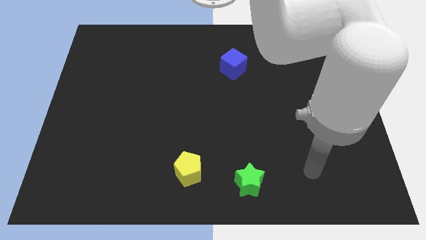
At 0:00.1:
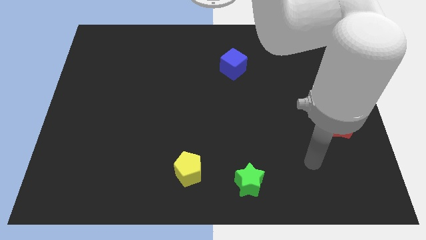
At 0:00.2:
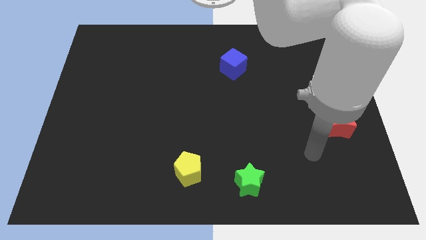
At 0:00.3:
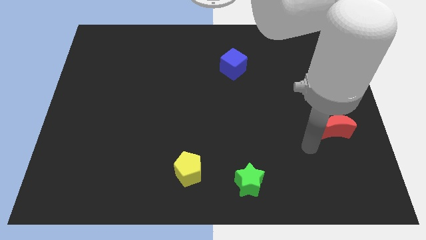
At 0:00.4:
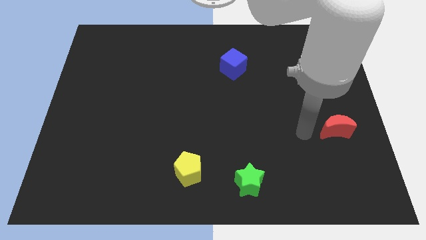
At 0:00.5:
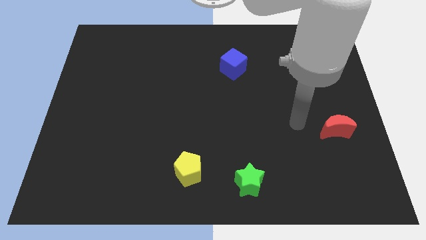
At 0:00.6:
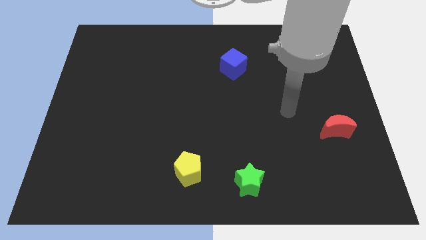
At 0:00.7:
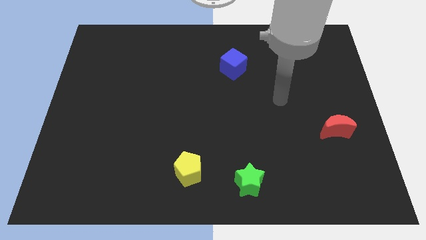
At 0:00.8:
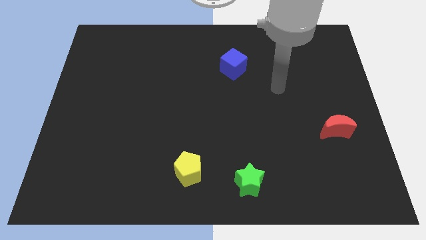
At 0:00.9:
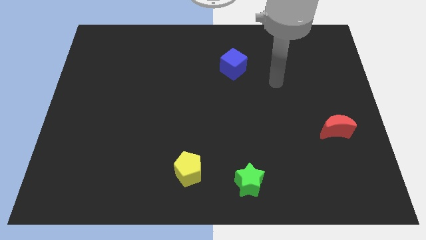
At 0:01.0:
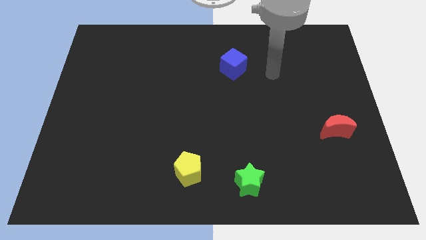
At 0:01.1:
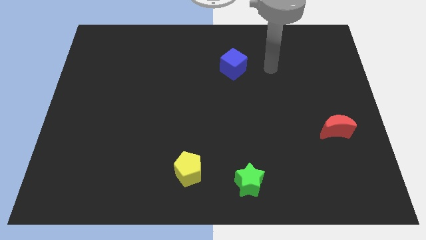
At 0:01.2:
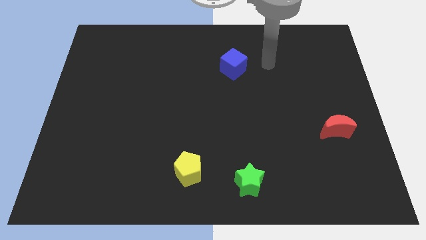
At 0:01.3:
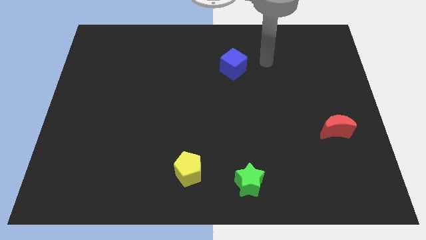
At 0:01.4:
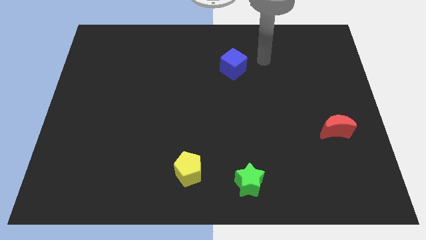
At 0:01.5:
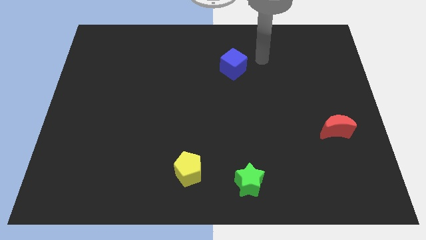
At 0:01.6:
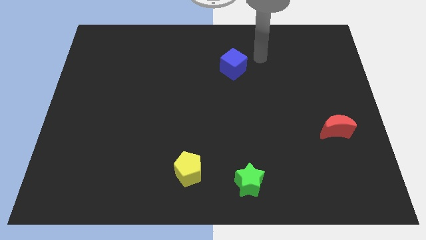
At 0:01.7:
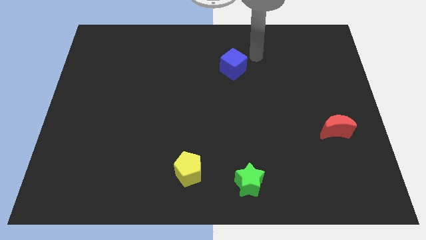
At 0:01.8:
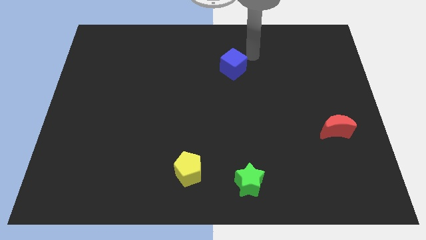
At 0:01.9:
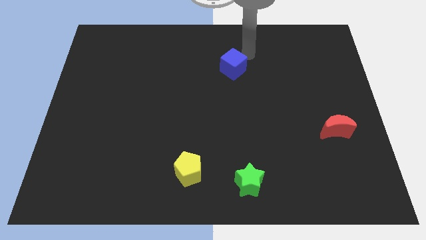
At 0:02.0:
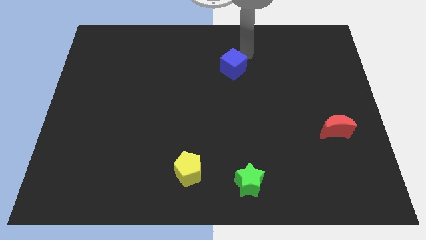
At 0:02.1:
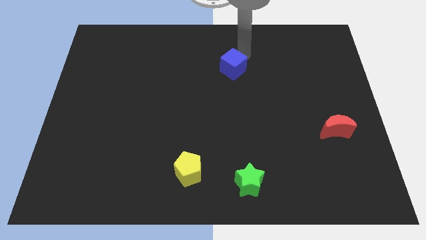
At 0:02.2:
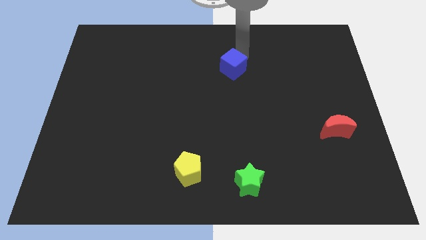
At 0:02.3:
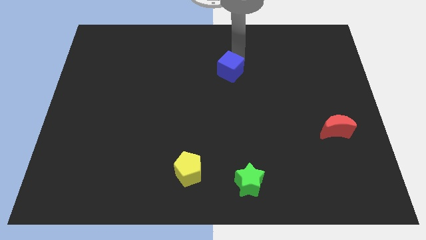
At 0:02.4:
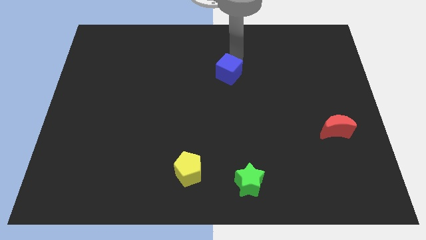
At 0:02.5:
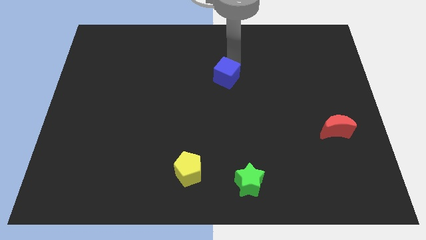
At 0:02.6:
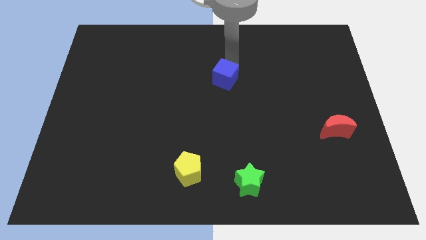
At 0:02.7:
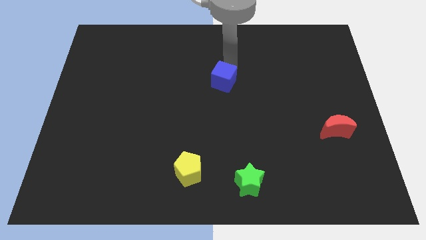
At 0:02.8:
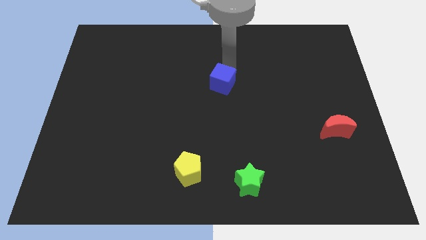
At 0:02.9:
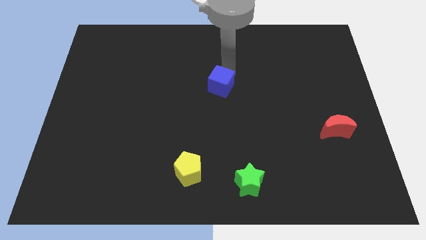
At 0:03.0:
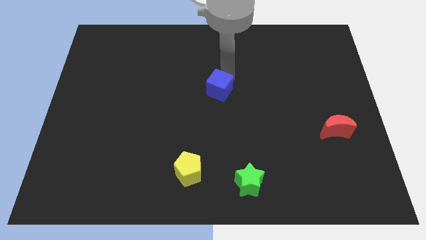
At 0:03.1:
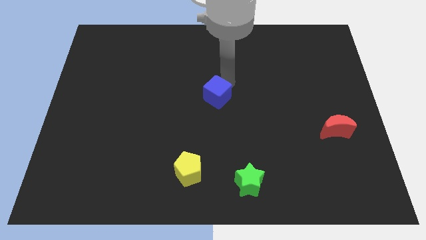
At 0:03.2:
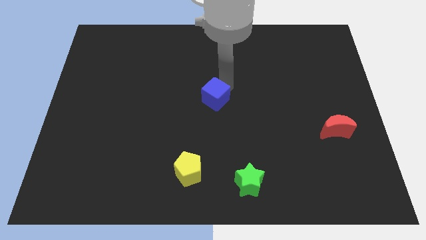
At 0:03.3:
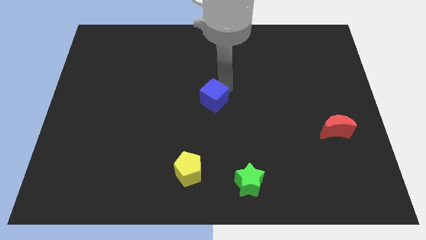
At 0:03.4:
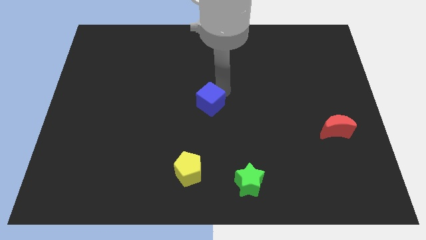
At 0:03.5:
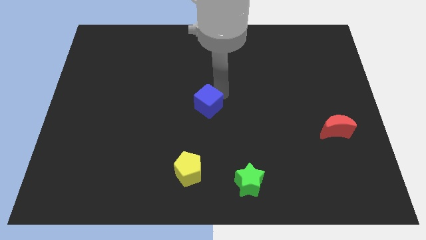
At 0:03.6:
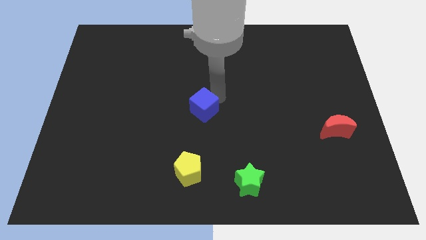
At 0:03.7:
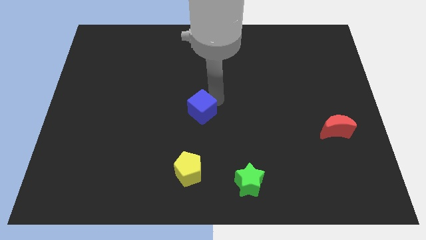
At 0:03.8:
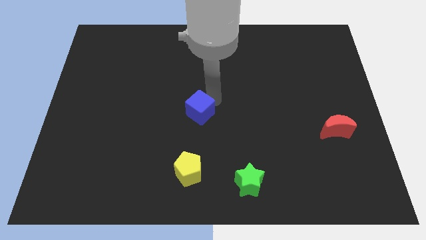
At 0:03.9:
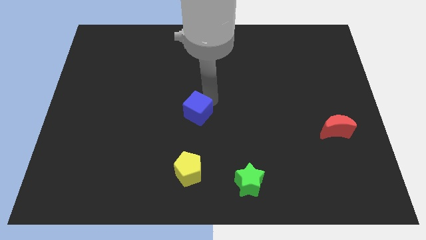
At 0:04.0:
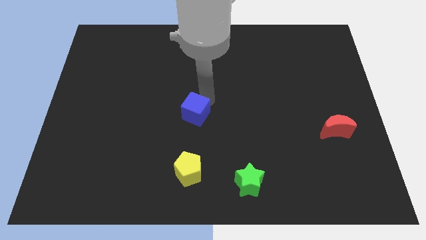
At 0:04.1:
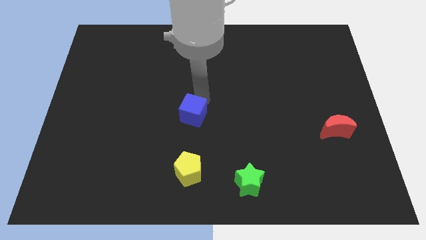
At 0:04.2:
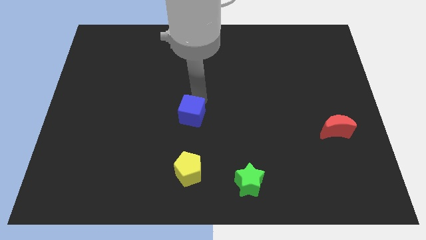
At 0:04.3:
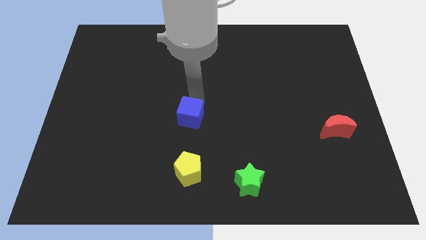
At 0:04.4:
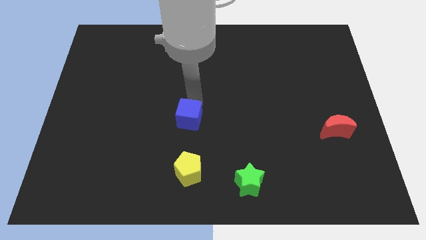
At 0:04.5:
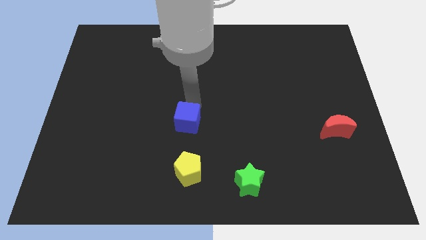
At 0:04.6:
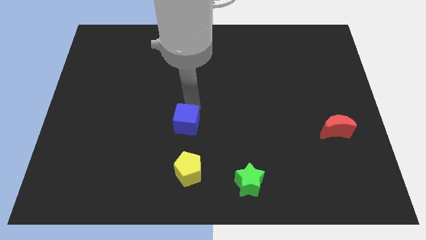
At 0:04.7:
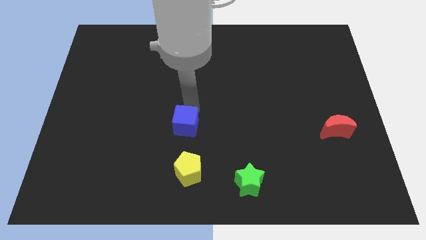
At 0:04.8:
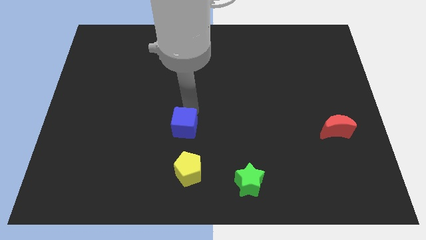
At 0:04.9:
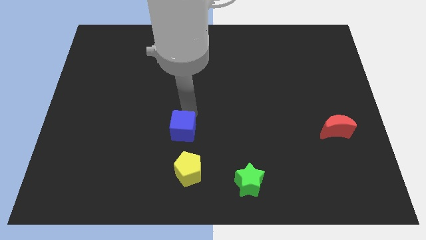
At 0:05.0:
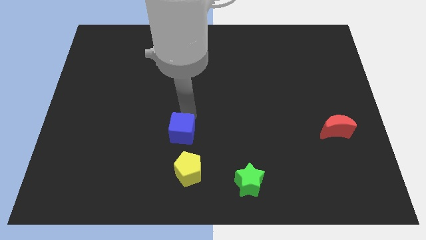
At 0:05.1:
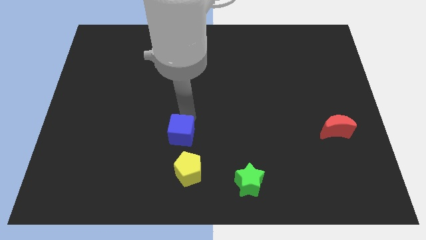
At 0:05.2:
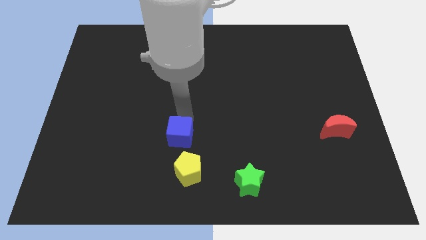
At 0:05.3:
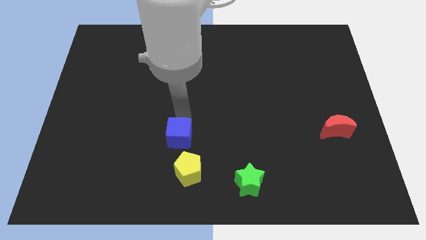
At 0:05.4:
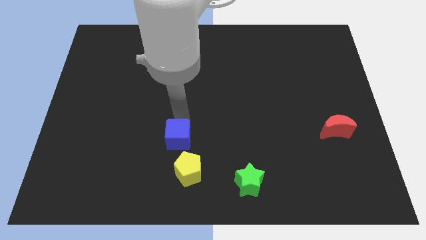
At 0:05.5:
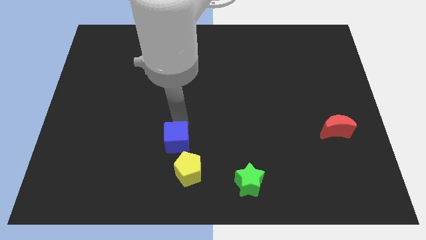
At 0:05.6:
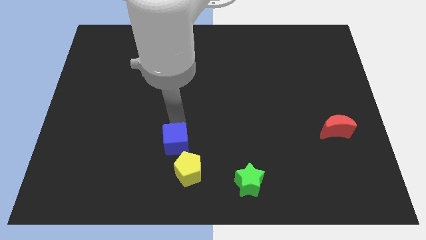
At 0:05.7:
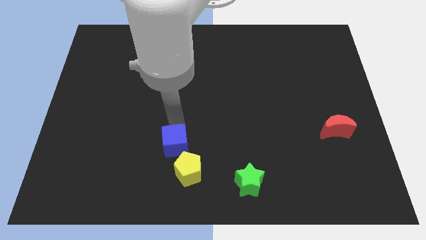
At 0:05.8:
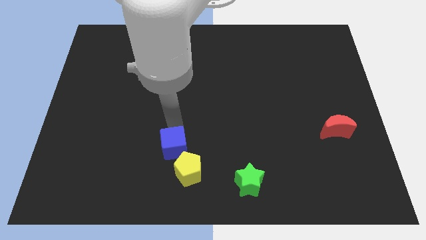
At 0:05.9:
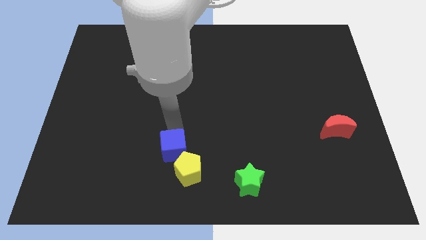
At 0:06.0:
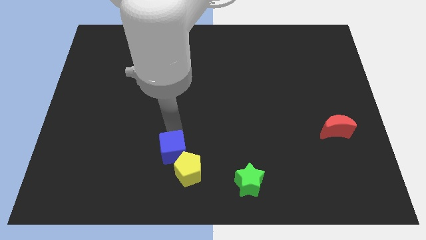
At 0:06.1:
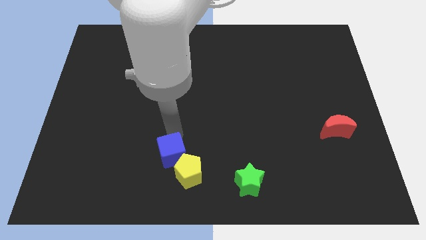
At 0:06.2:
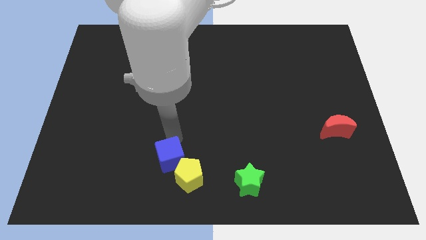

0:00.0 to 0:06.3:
slide the cube to the pentagon

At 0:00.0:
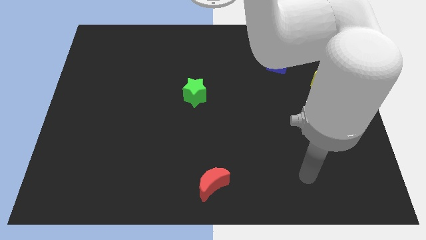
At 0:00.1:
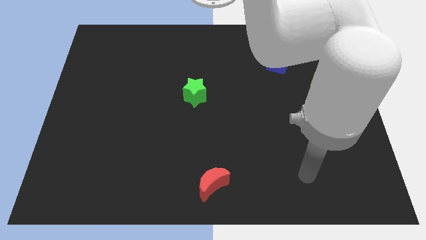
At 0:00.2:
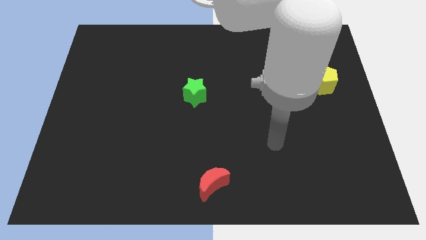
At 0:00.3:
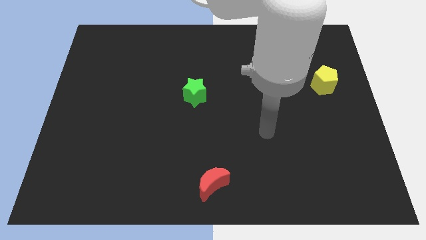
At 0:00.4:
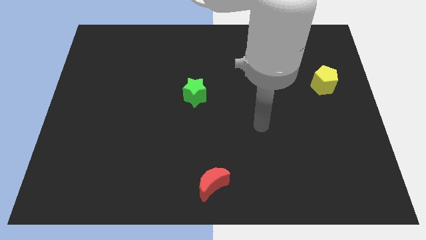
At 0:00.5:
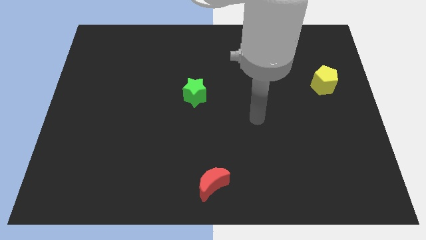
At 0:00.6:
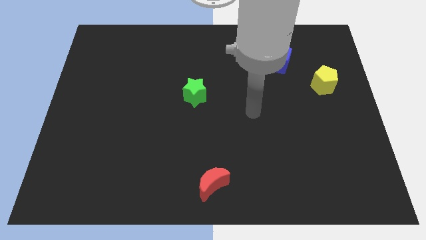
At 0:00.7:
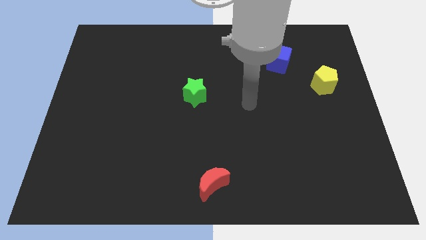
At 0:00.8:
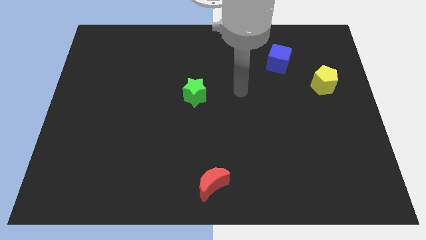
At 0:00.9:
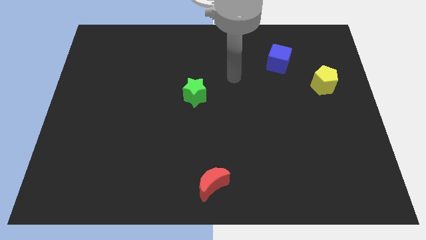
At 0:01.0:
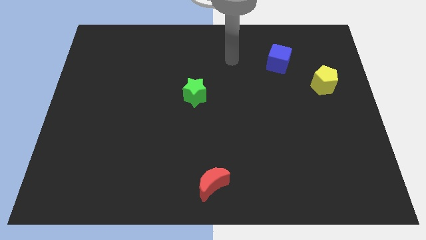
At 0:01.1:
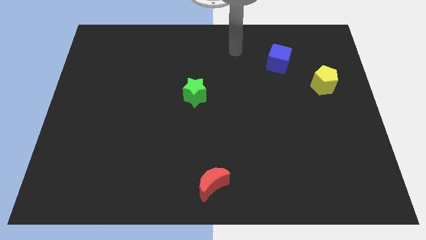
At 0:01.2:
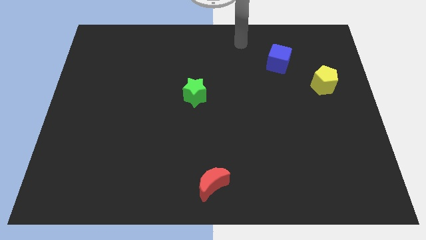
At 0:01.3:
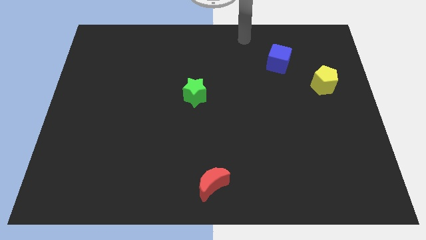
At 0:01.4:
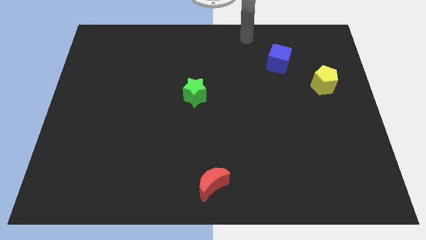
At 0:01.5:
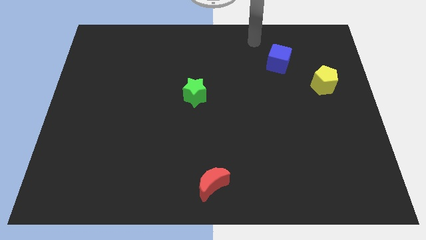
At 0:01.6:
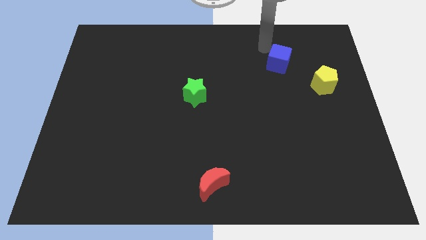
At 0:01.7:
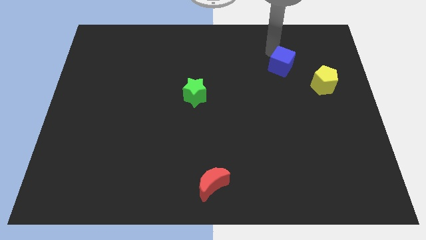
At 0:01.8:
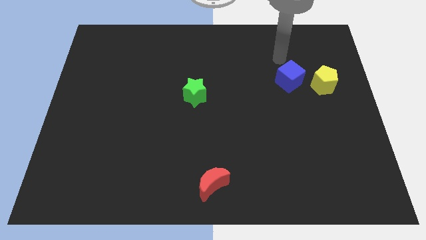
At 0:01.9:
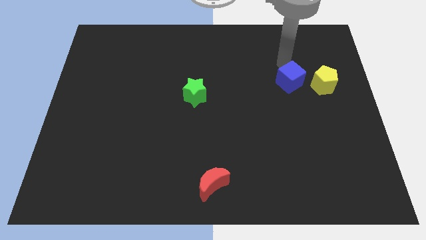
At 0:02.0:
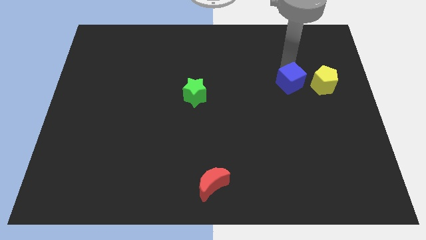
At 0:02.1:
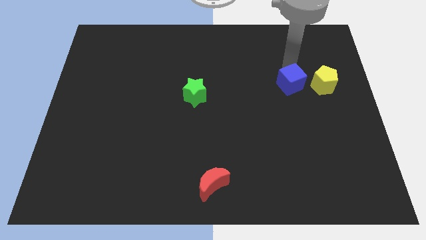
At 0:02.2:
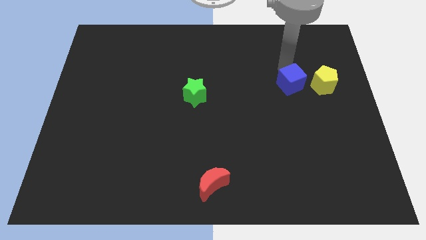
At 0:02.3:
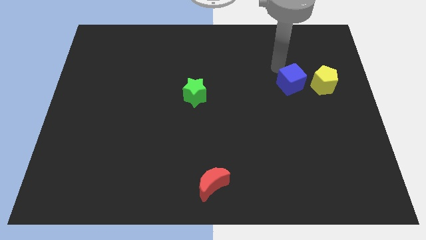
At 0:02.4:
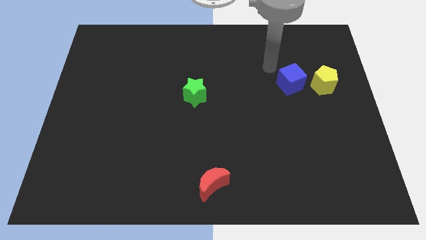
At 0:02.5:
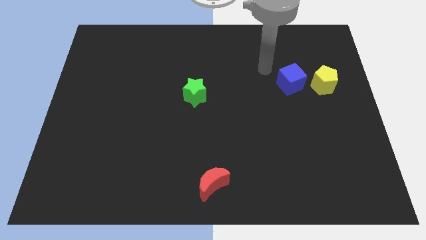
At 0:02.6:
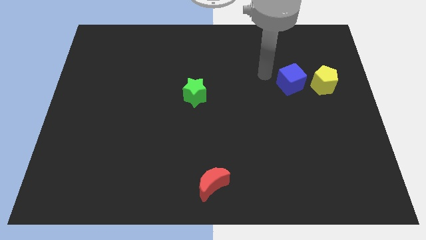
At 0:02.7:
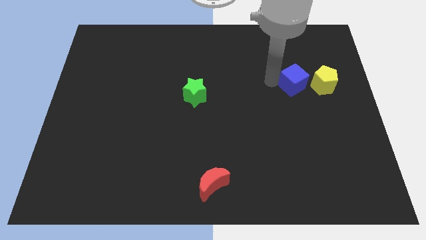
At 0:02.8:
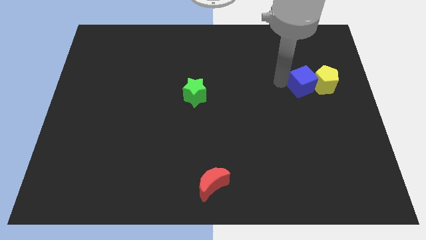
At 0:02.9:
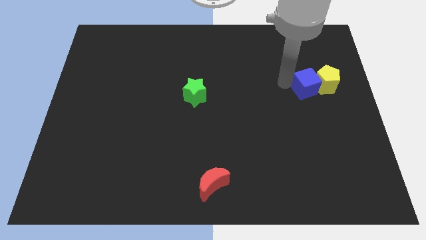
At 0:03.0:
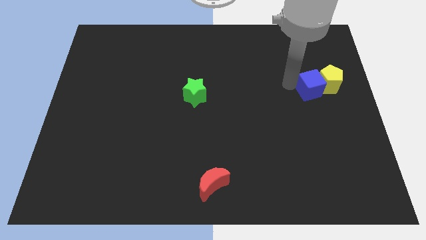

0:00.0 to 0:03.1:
put the blue block towards the yellow block
